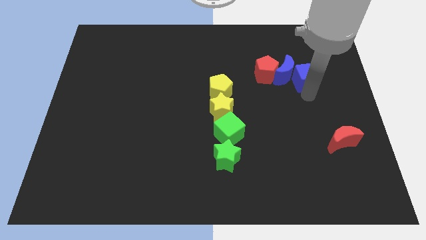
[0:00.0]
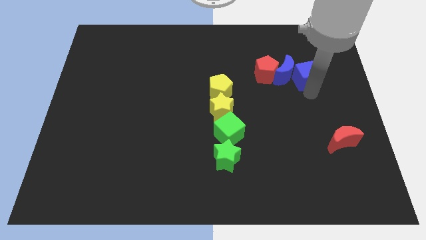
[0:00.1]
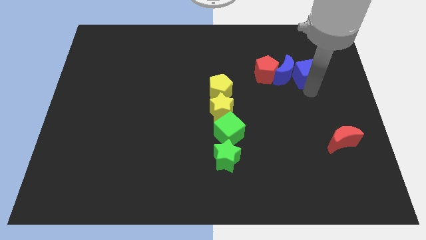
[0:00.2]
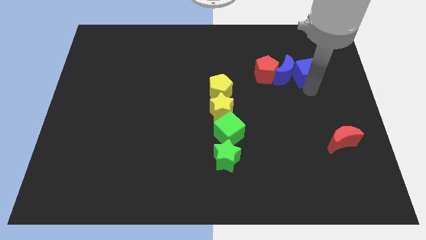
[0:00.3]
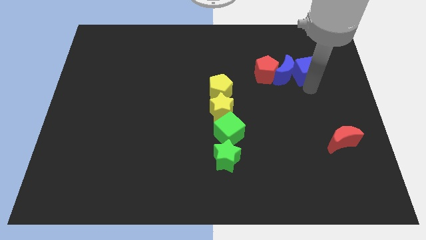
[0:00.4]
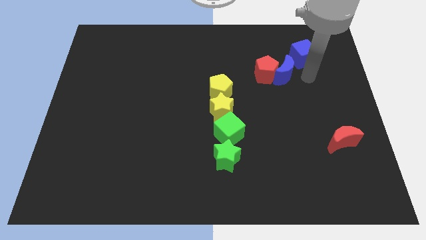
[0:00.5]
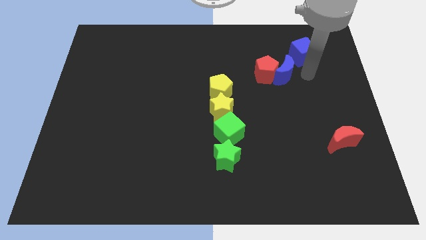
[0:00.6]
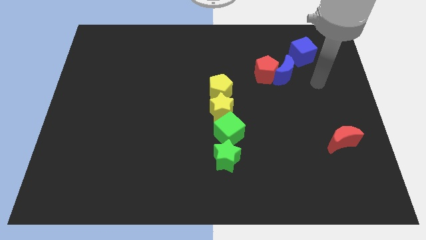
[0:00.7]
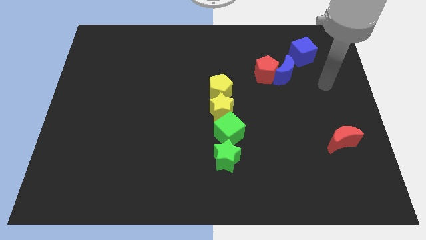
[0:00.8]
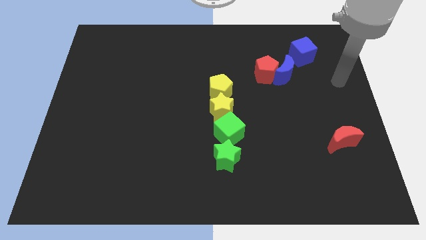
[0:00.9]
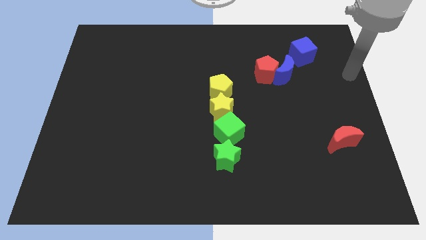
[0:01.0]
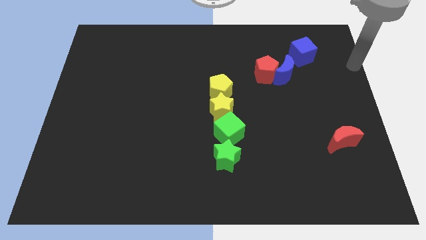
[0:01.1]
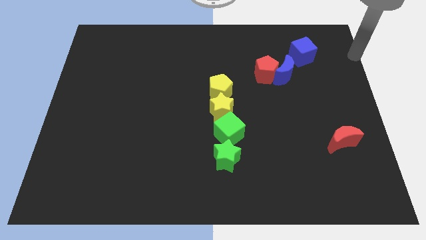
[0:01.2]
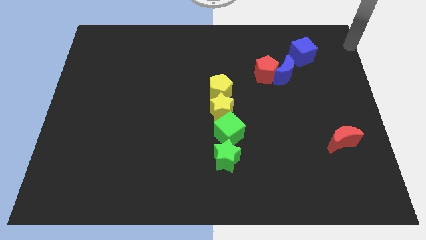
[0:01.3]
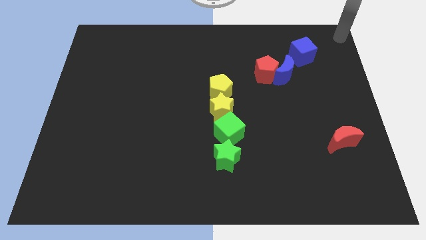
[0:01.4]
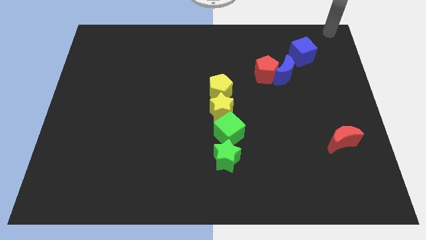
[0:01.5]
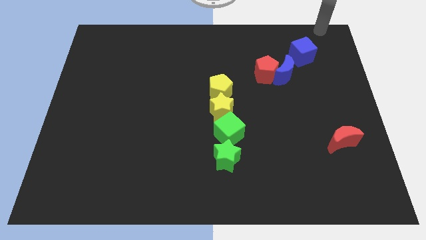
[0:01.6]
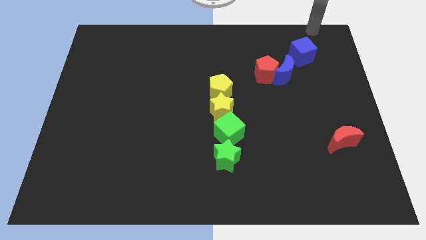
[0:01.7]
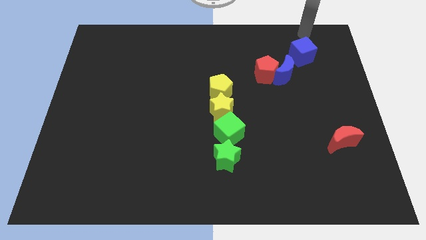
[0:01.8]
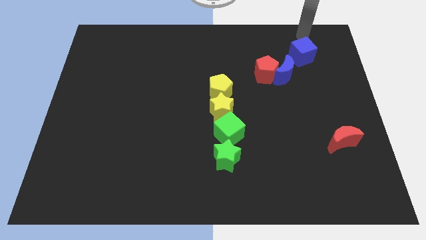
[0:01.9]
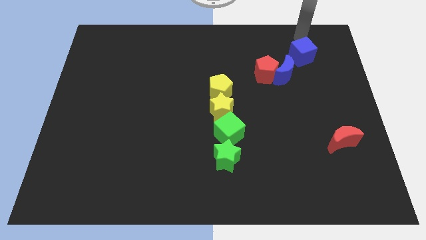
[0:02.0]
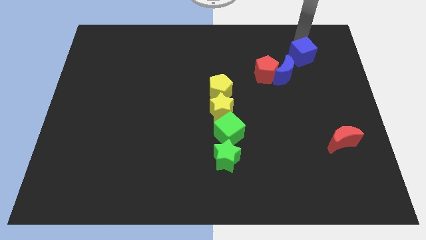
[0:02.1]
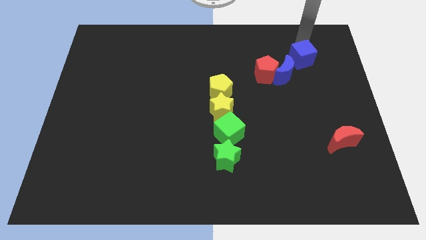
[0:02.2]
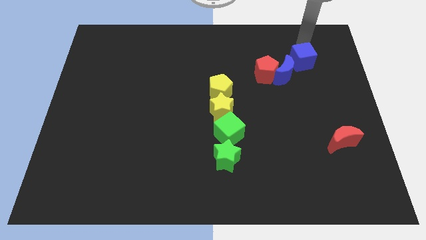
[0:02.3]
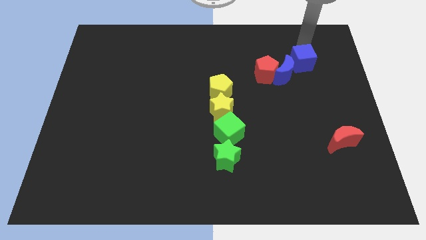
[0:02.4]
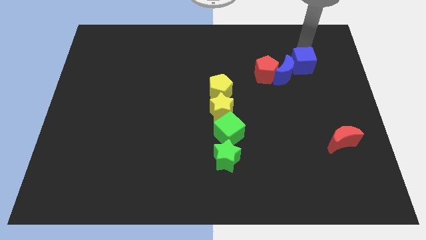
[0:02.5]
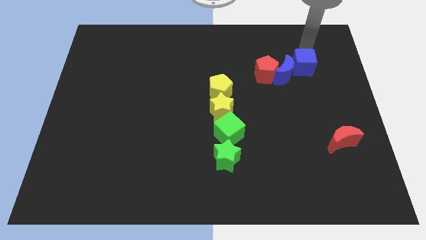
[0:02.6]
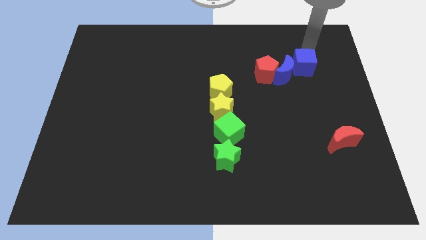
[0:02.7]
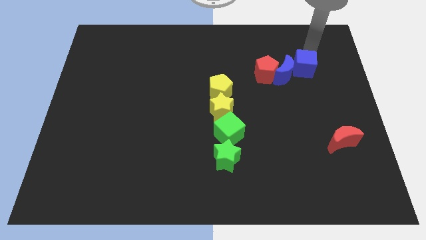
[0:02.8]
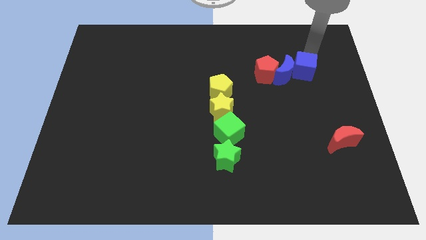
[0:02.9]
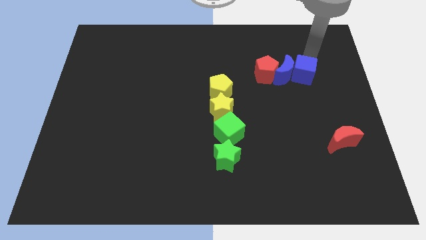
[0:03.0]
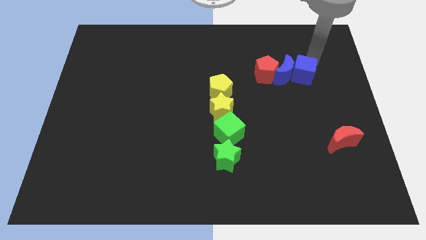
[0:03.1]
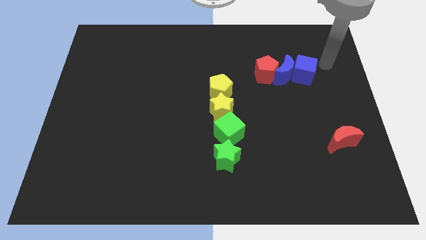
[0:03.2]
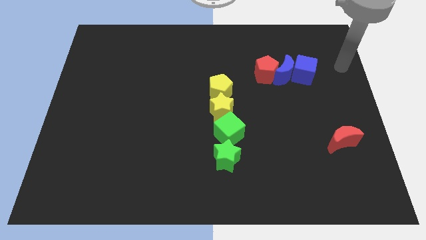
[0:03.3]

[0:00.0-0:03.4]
place the blue cube right to the blue crescent

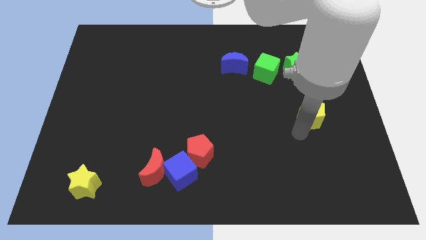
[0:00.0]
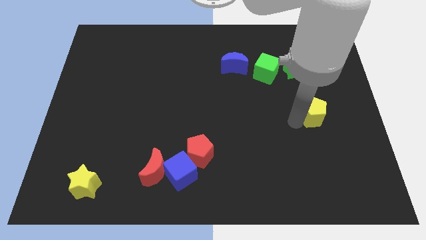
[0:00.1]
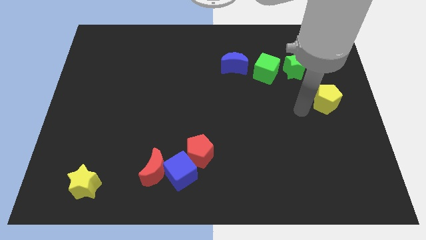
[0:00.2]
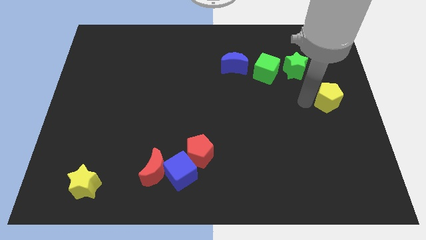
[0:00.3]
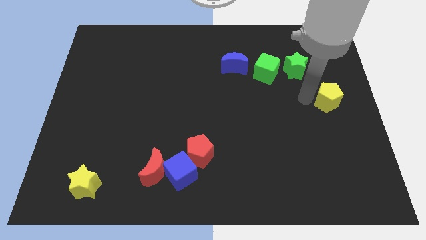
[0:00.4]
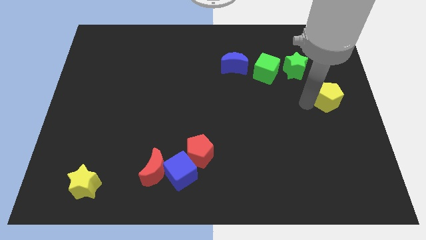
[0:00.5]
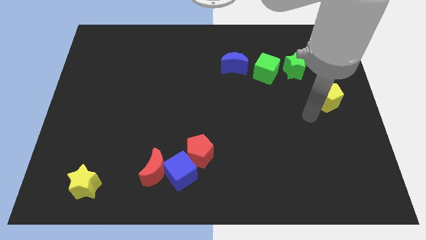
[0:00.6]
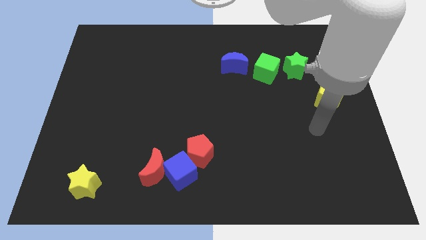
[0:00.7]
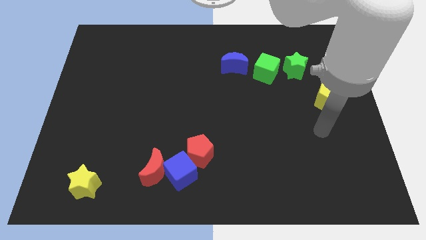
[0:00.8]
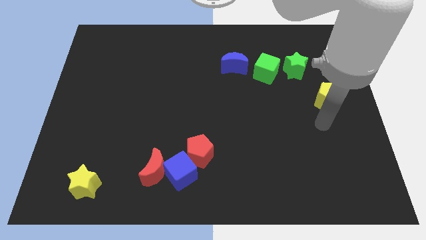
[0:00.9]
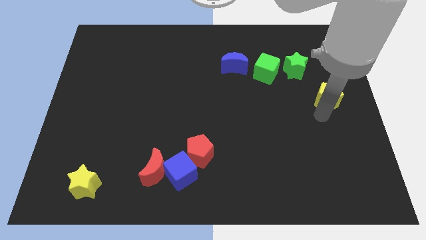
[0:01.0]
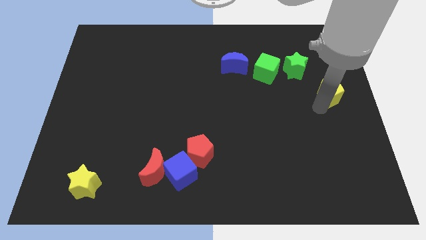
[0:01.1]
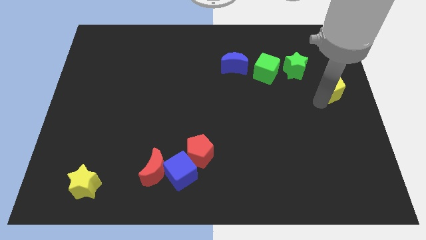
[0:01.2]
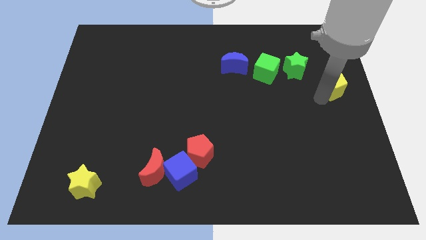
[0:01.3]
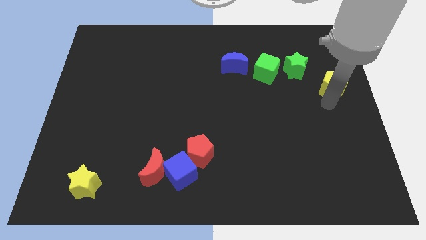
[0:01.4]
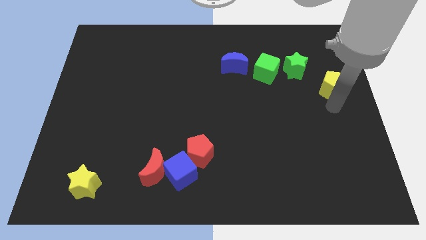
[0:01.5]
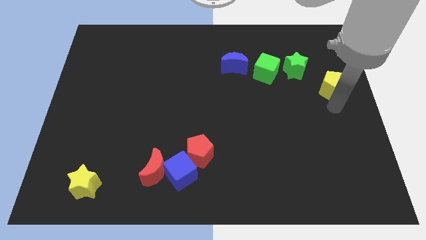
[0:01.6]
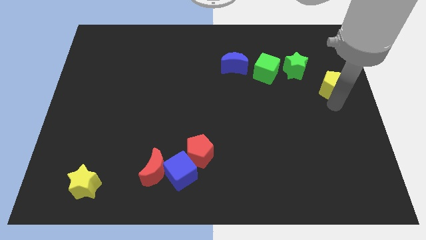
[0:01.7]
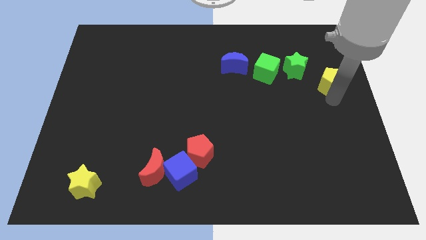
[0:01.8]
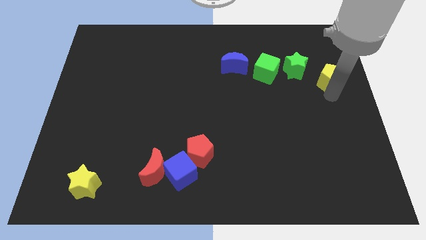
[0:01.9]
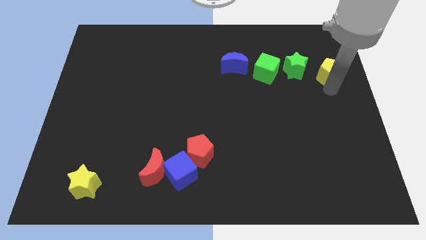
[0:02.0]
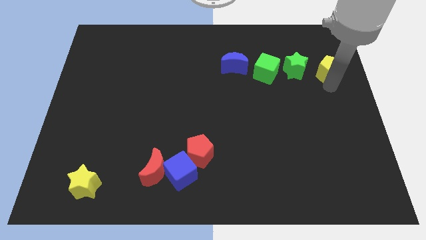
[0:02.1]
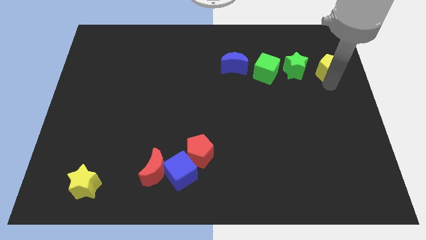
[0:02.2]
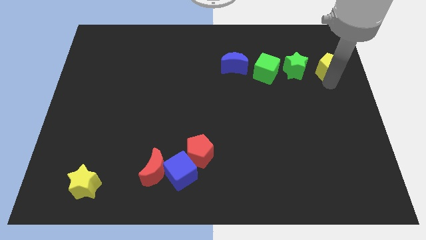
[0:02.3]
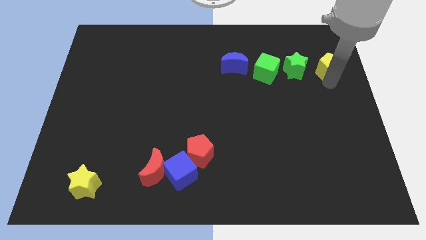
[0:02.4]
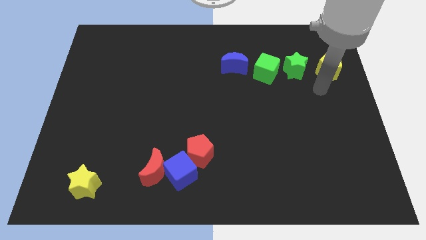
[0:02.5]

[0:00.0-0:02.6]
push the yellow pentagon to the right of the green star

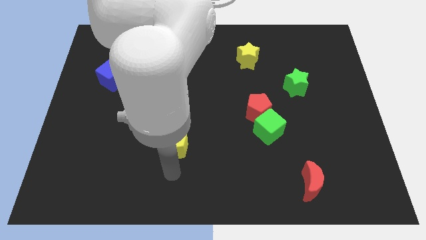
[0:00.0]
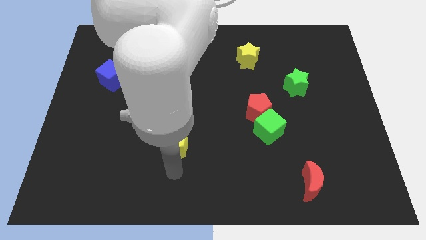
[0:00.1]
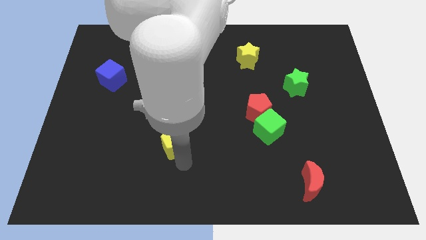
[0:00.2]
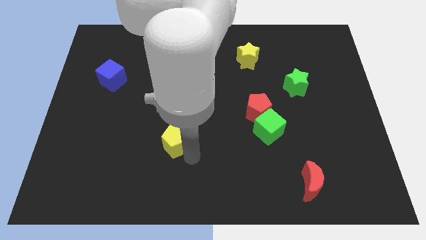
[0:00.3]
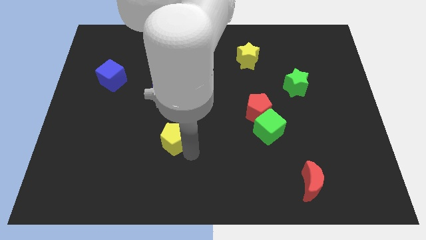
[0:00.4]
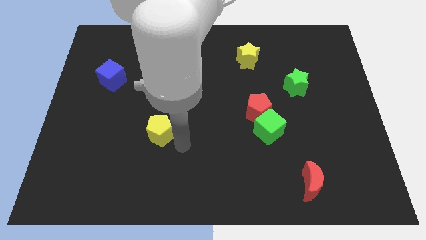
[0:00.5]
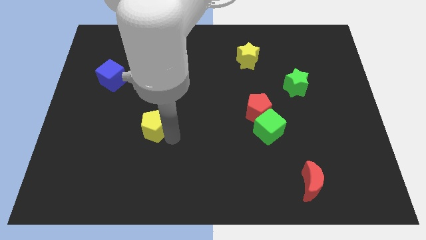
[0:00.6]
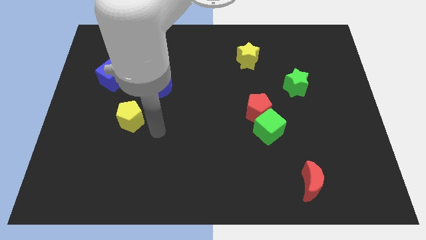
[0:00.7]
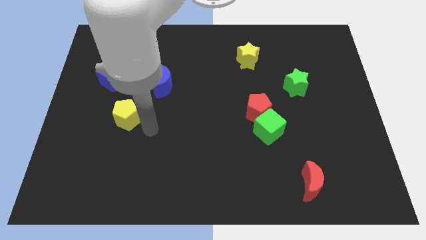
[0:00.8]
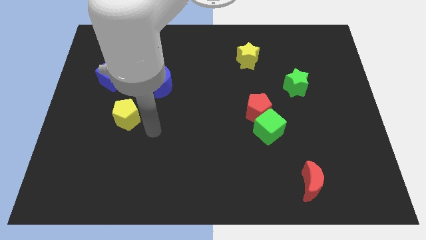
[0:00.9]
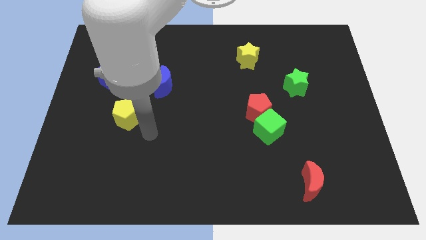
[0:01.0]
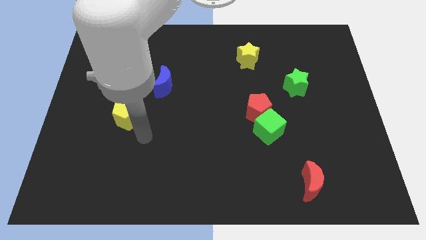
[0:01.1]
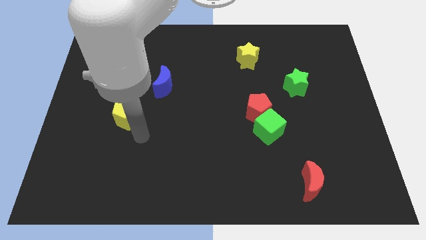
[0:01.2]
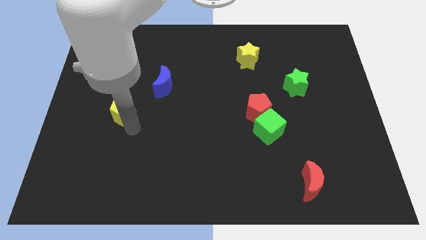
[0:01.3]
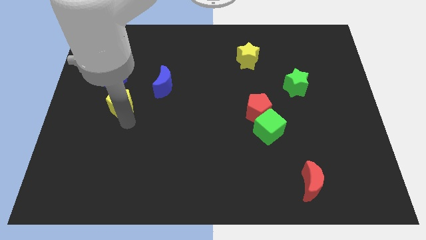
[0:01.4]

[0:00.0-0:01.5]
drag the yellow pentagon towards the blue cube

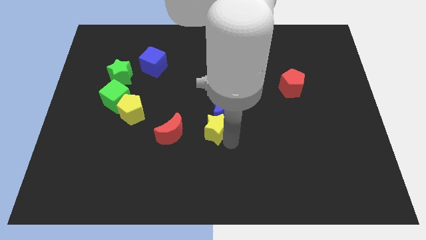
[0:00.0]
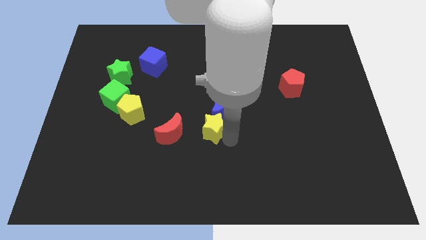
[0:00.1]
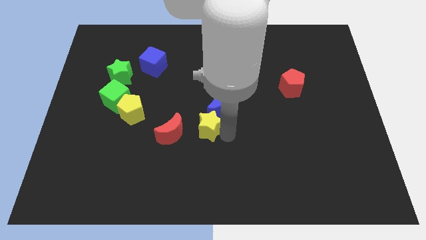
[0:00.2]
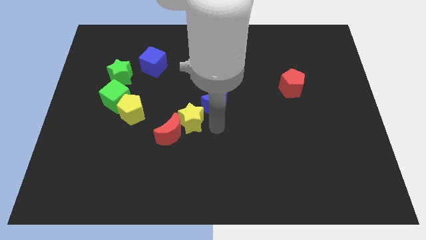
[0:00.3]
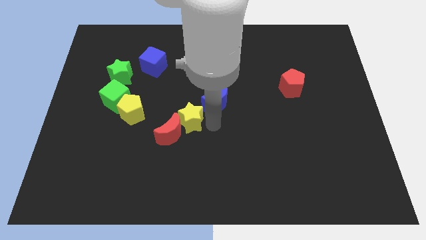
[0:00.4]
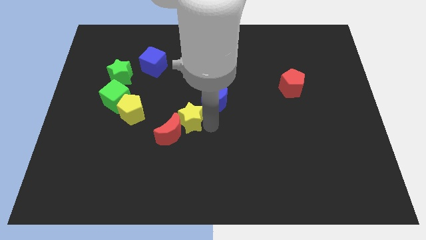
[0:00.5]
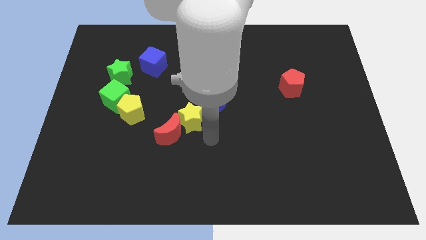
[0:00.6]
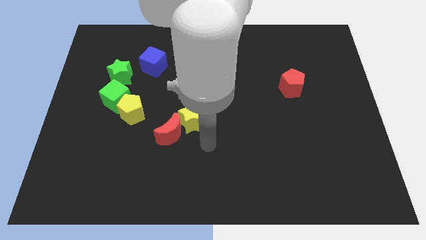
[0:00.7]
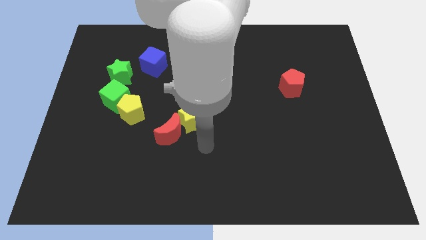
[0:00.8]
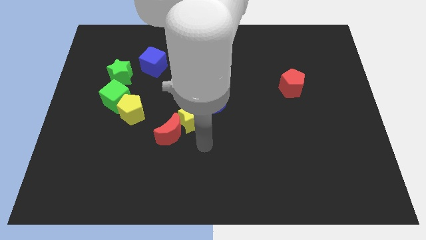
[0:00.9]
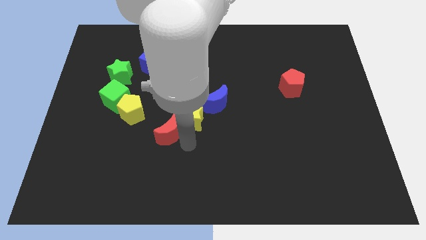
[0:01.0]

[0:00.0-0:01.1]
place the yellow star in between the red and blue moons

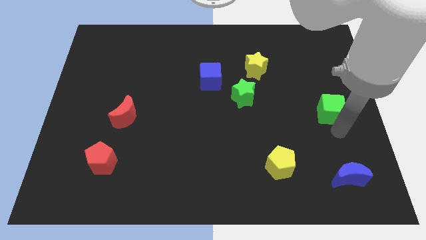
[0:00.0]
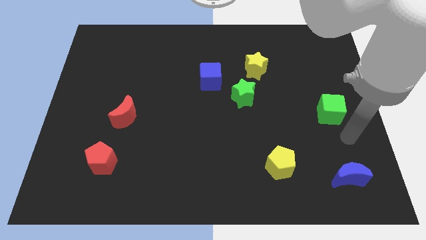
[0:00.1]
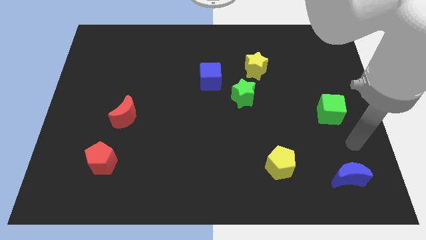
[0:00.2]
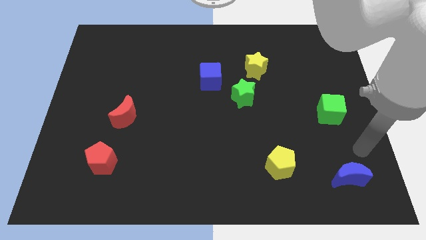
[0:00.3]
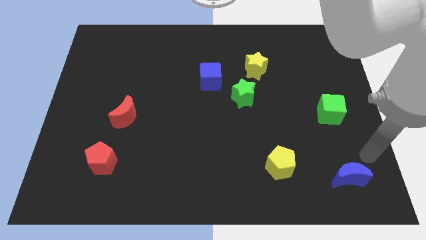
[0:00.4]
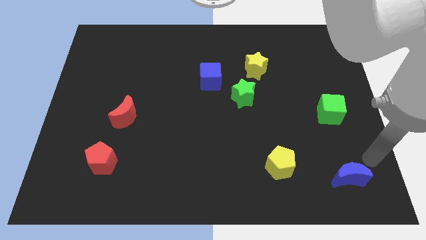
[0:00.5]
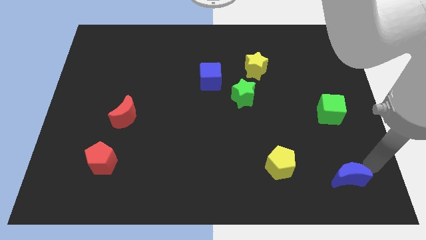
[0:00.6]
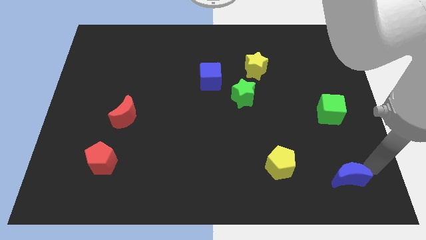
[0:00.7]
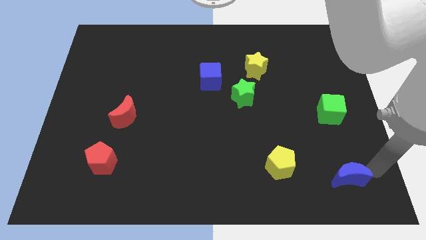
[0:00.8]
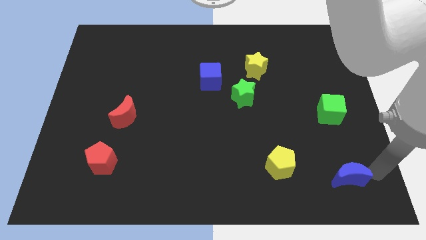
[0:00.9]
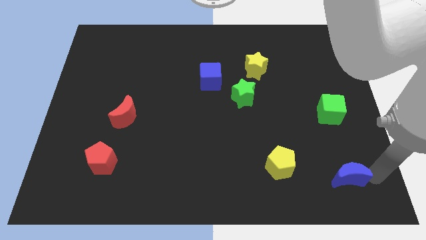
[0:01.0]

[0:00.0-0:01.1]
touch the right side of the blue crescent
